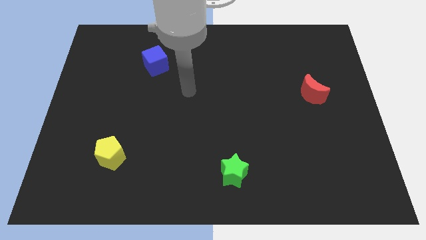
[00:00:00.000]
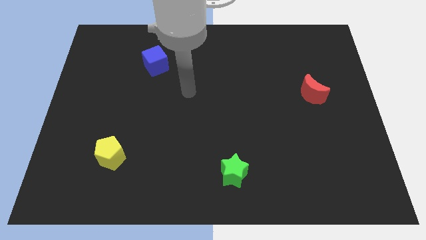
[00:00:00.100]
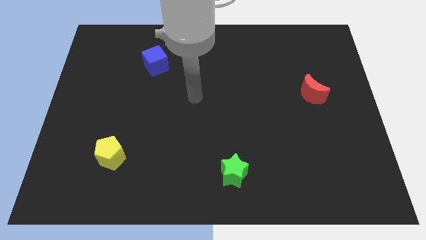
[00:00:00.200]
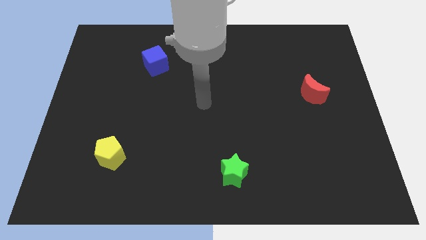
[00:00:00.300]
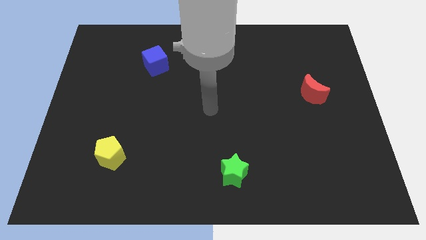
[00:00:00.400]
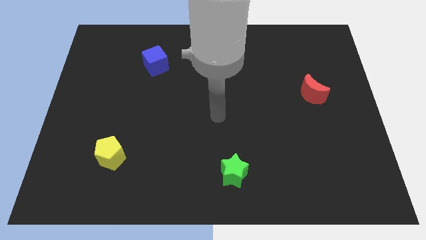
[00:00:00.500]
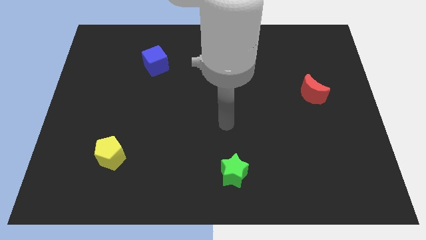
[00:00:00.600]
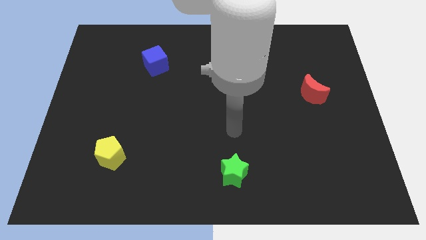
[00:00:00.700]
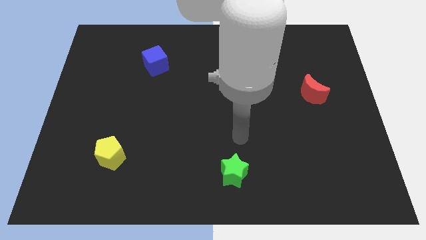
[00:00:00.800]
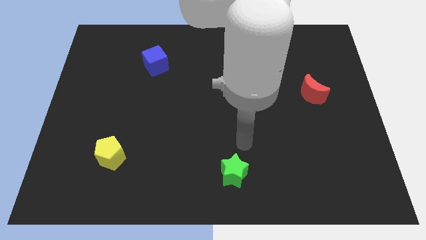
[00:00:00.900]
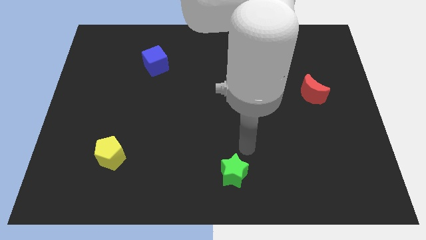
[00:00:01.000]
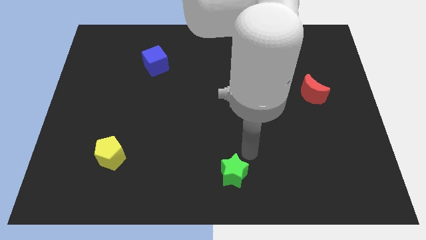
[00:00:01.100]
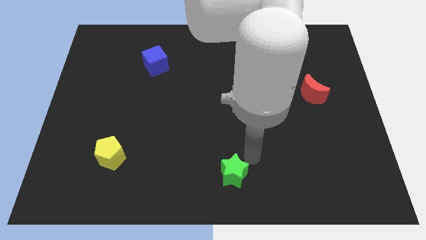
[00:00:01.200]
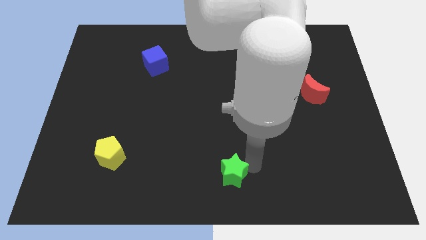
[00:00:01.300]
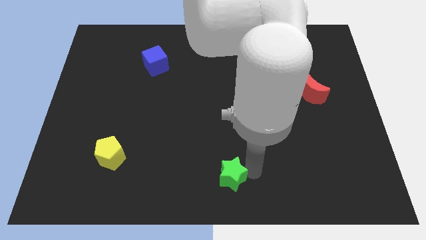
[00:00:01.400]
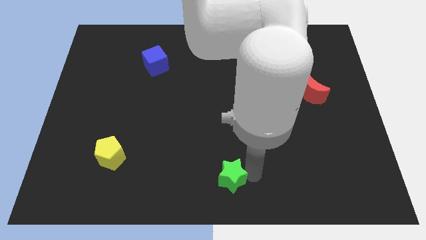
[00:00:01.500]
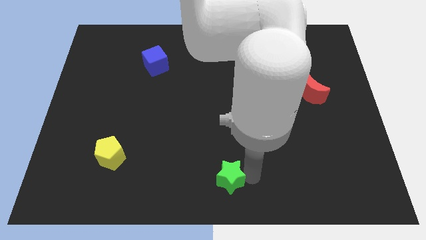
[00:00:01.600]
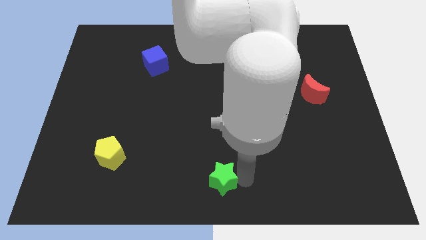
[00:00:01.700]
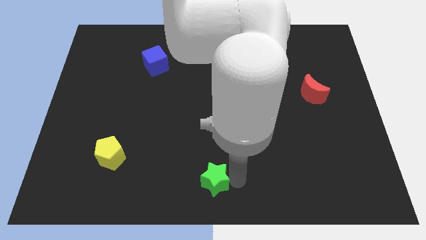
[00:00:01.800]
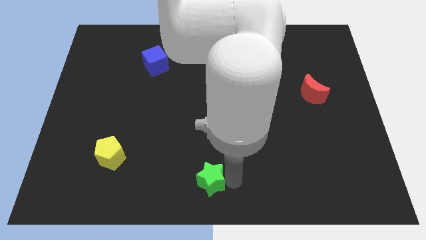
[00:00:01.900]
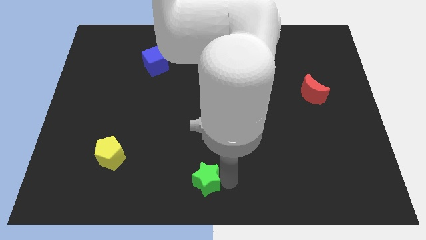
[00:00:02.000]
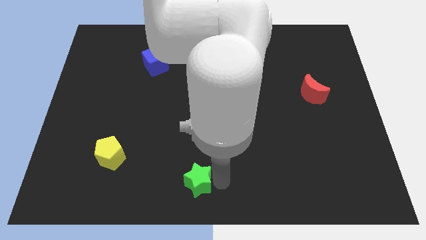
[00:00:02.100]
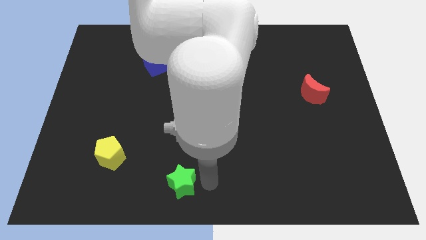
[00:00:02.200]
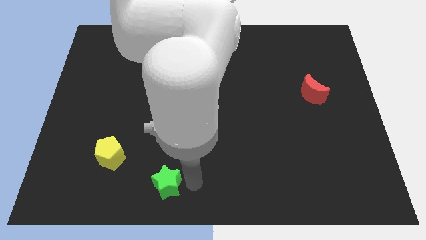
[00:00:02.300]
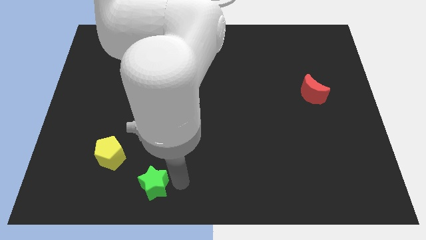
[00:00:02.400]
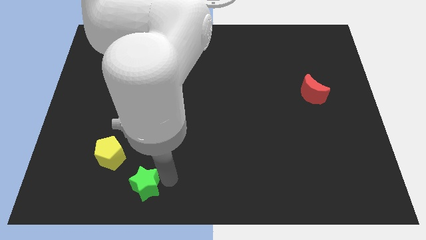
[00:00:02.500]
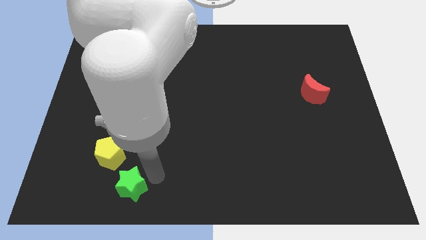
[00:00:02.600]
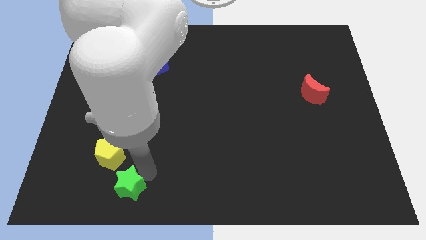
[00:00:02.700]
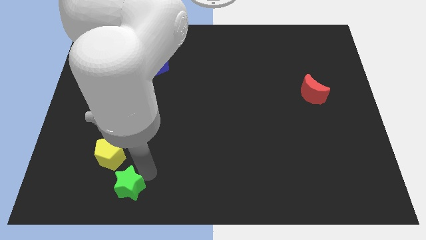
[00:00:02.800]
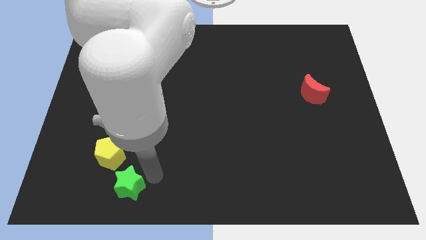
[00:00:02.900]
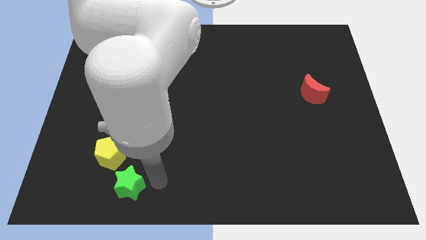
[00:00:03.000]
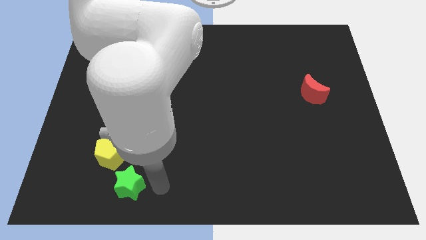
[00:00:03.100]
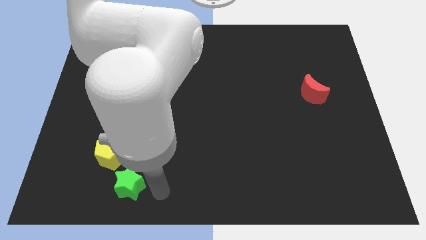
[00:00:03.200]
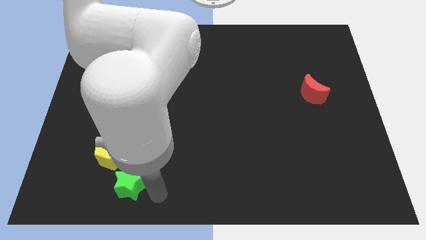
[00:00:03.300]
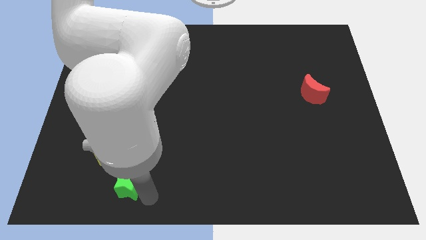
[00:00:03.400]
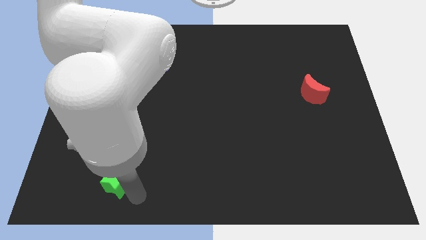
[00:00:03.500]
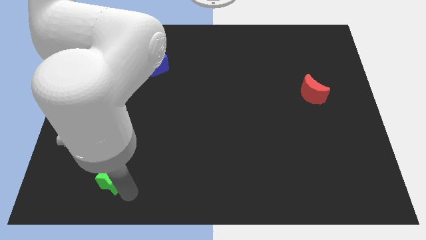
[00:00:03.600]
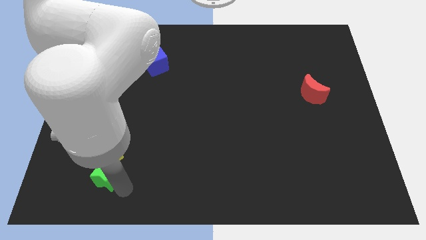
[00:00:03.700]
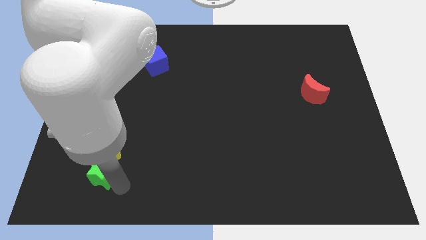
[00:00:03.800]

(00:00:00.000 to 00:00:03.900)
slide the star next to the yellow pentagon

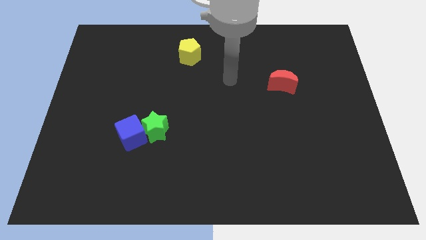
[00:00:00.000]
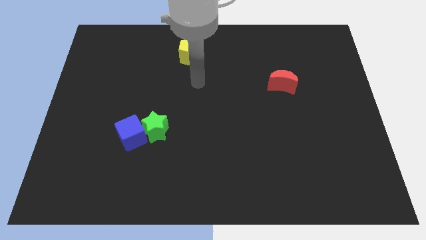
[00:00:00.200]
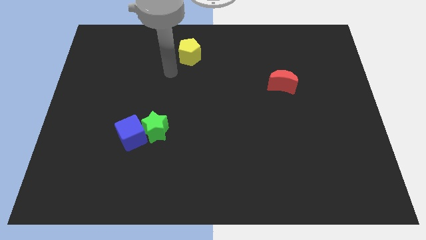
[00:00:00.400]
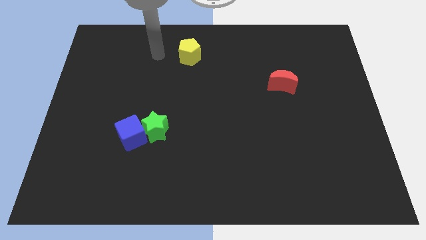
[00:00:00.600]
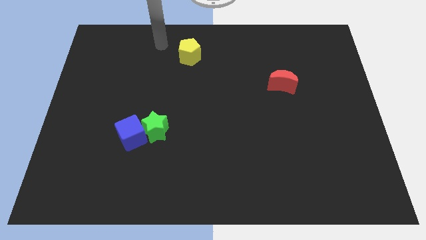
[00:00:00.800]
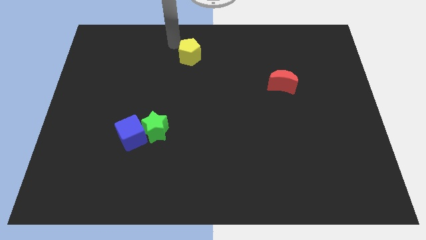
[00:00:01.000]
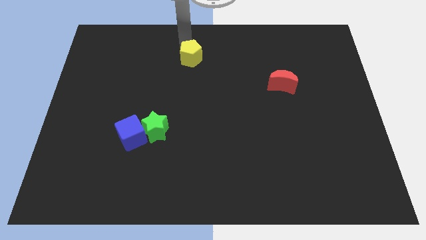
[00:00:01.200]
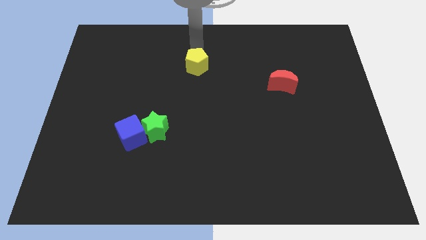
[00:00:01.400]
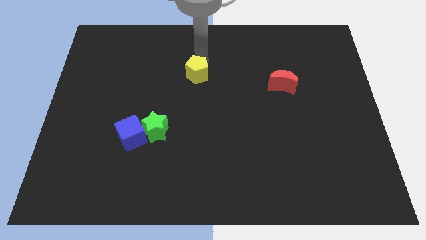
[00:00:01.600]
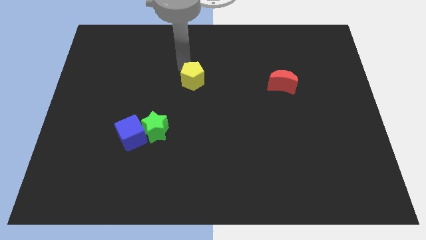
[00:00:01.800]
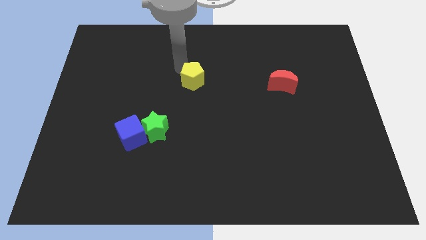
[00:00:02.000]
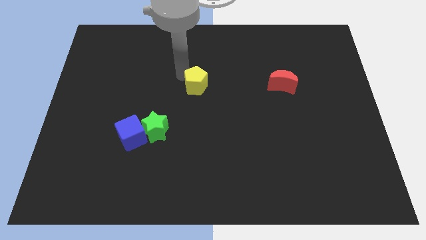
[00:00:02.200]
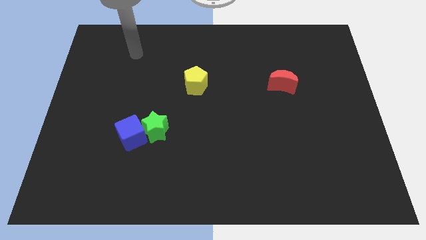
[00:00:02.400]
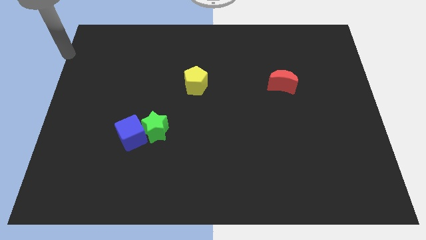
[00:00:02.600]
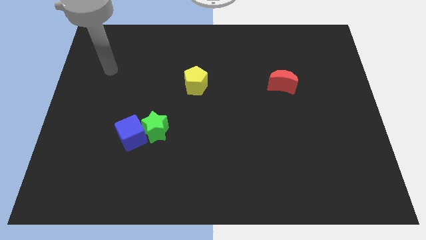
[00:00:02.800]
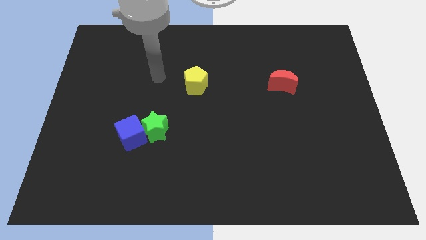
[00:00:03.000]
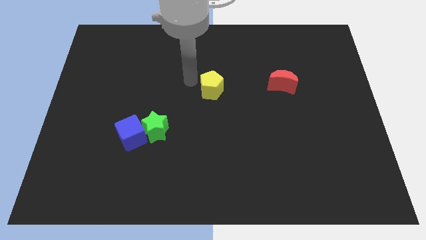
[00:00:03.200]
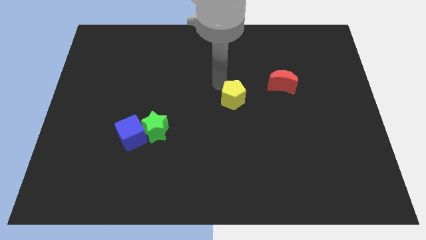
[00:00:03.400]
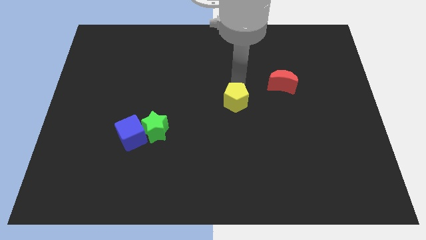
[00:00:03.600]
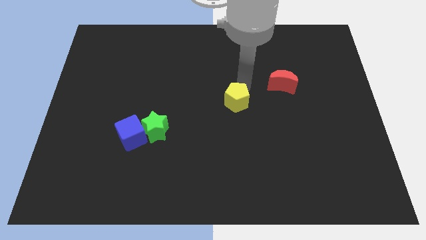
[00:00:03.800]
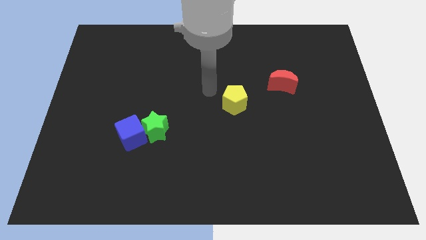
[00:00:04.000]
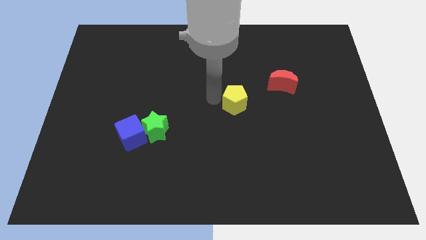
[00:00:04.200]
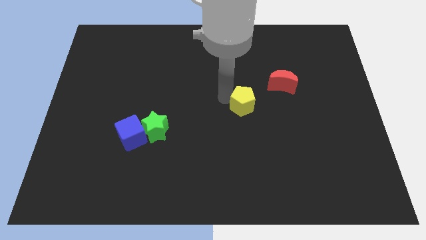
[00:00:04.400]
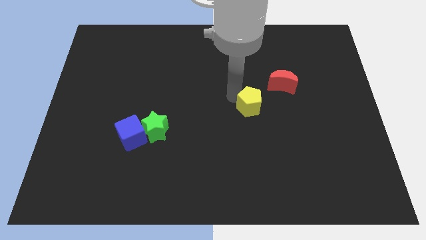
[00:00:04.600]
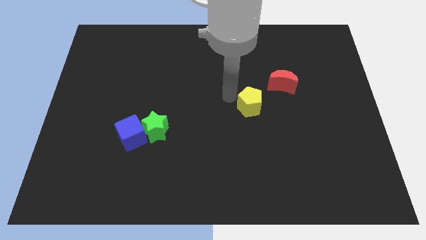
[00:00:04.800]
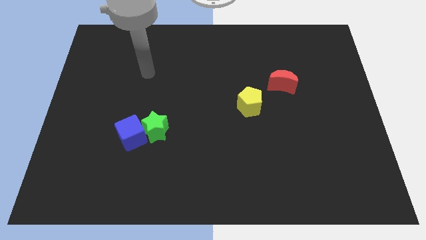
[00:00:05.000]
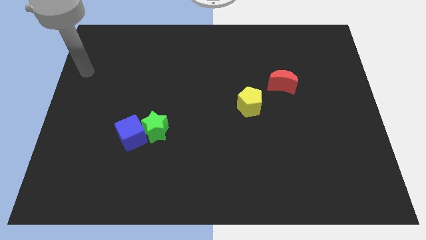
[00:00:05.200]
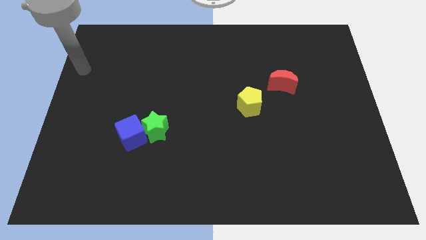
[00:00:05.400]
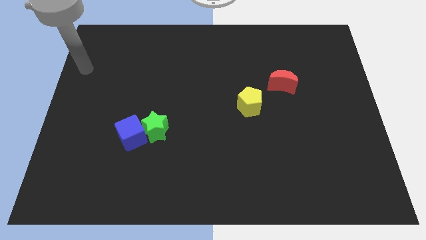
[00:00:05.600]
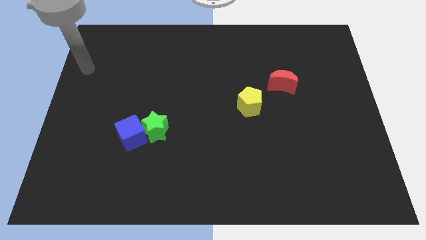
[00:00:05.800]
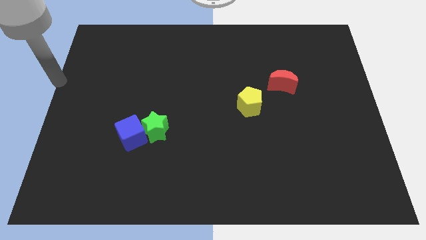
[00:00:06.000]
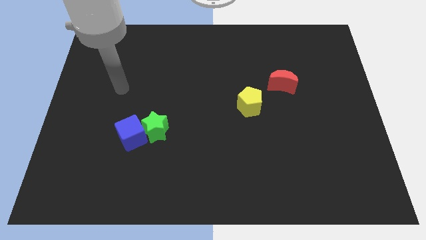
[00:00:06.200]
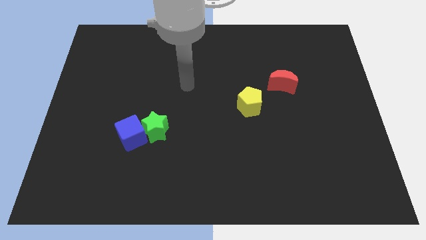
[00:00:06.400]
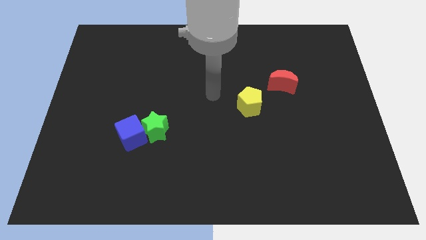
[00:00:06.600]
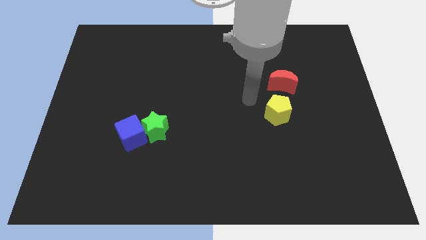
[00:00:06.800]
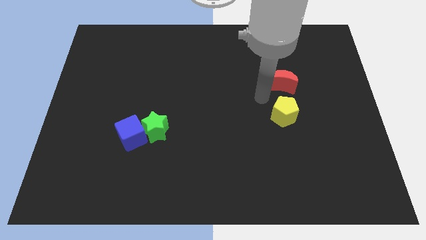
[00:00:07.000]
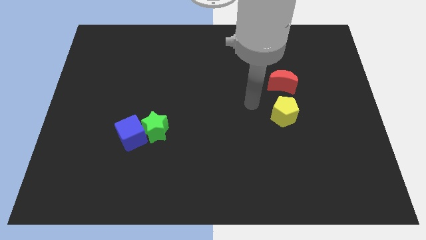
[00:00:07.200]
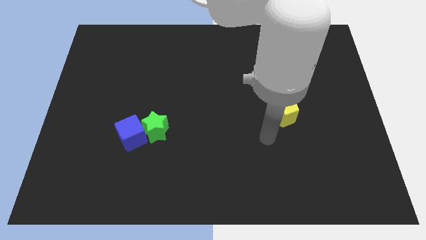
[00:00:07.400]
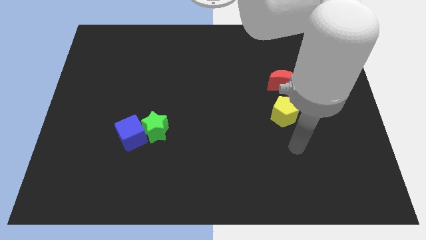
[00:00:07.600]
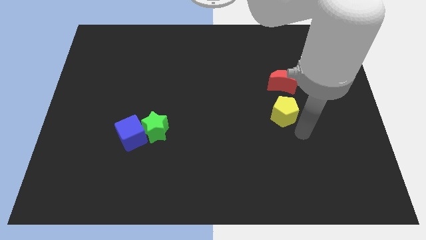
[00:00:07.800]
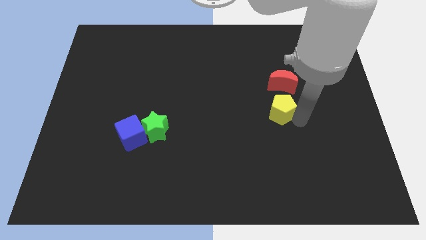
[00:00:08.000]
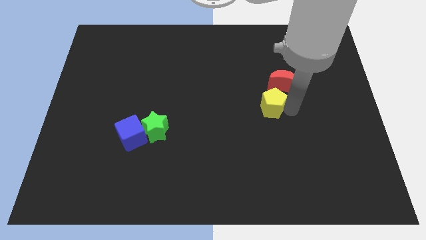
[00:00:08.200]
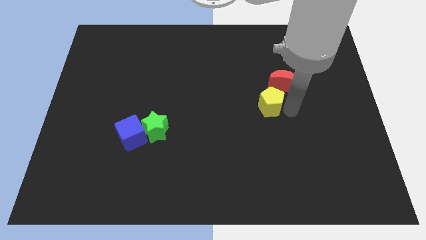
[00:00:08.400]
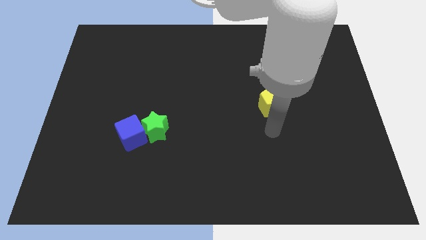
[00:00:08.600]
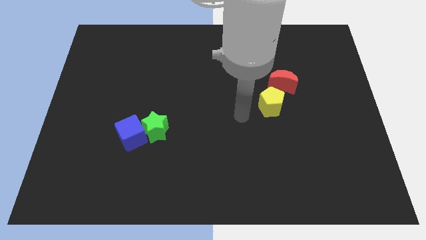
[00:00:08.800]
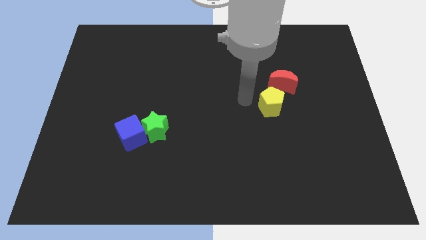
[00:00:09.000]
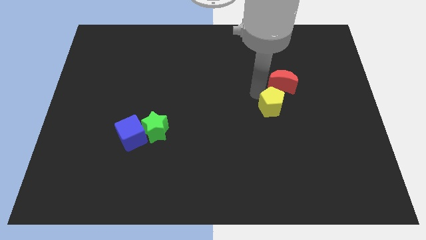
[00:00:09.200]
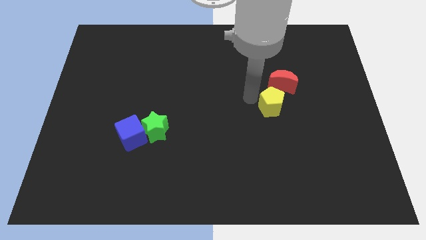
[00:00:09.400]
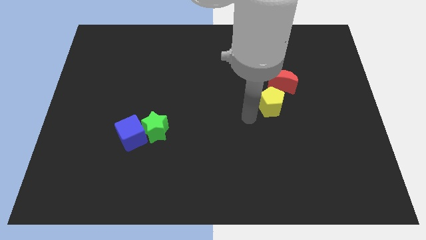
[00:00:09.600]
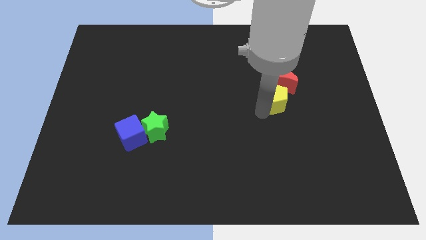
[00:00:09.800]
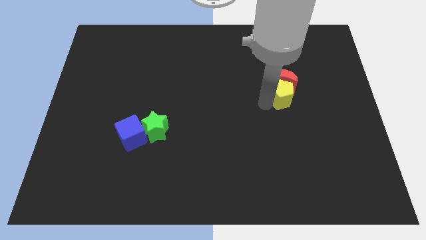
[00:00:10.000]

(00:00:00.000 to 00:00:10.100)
move the yellow pentagon next to the moon
